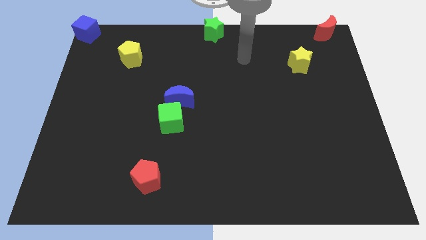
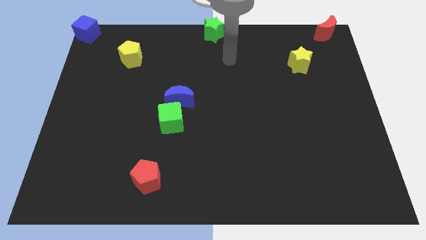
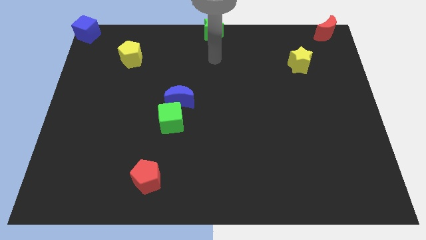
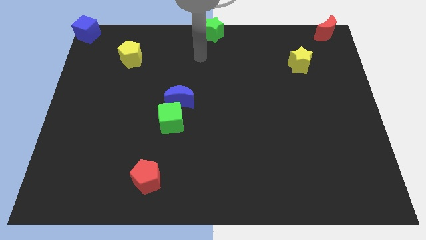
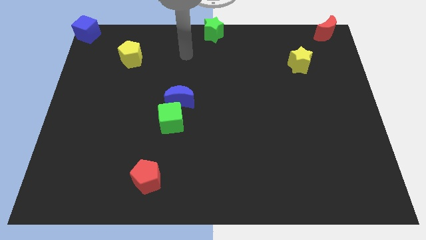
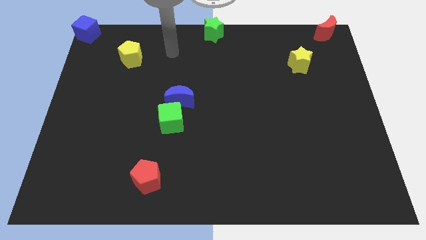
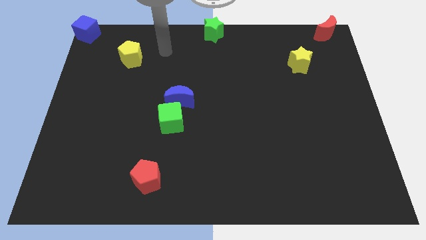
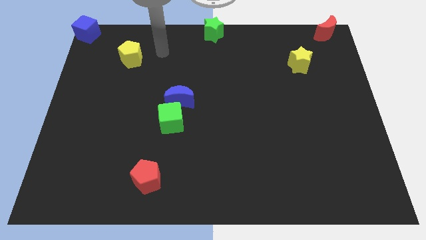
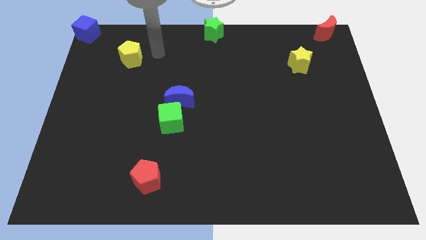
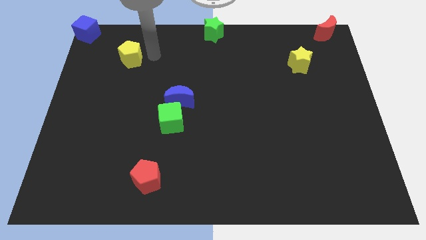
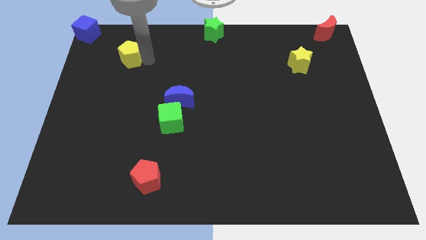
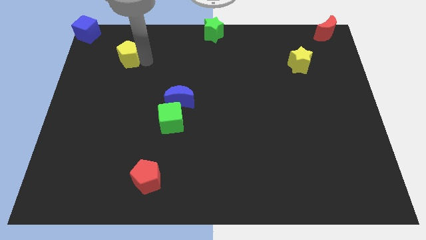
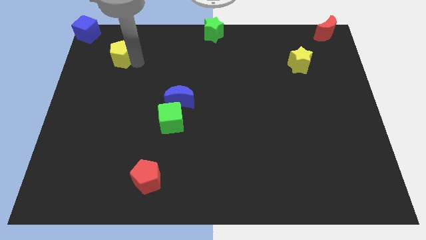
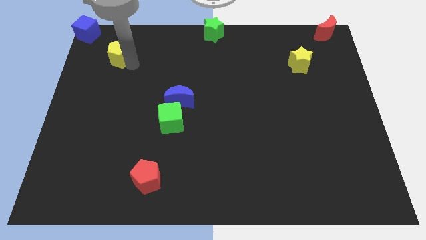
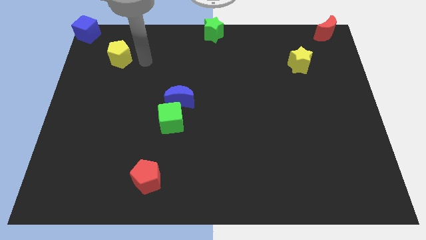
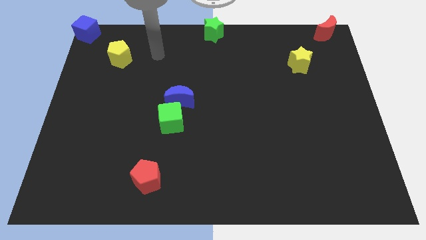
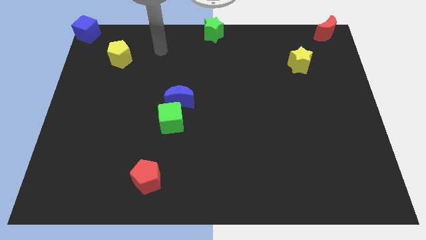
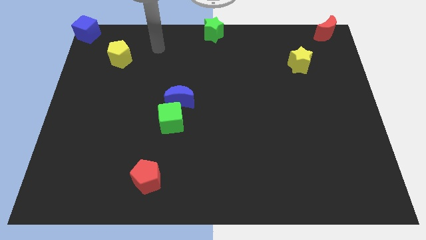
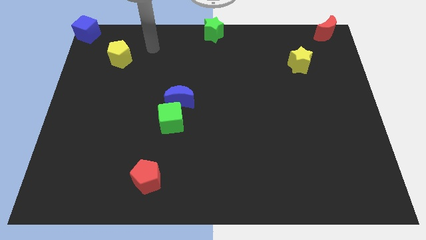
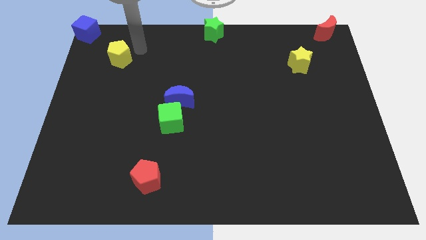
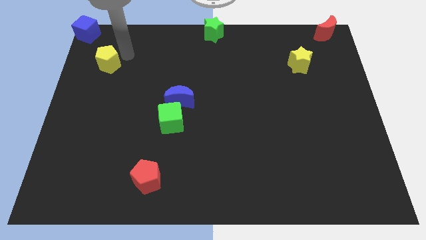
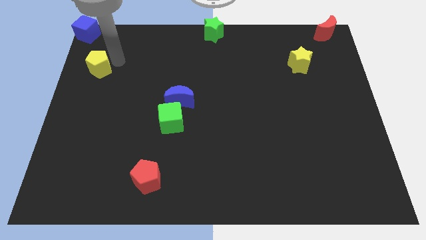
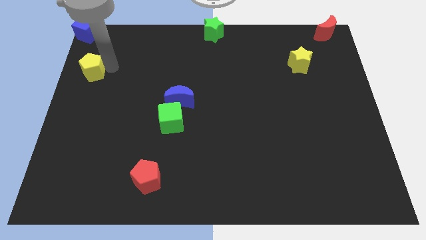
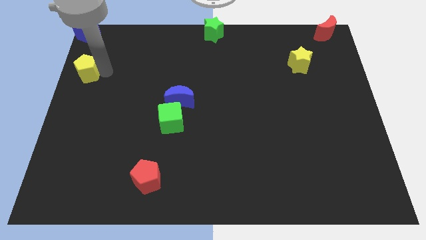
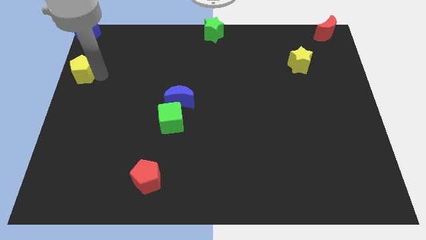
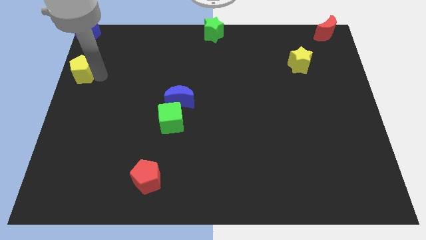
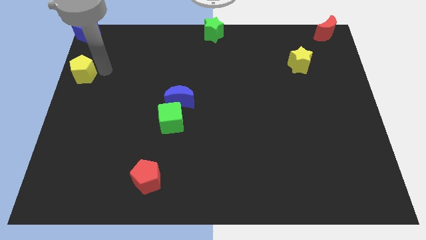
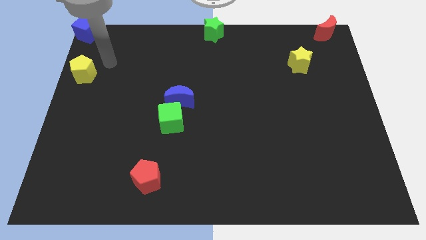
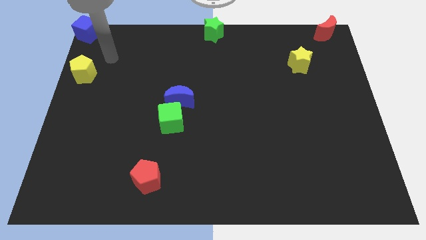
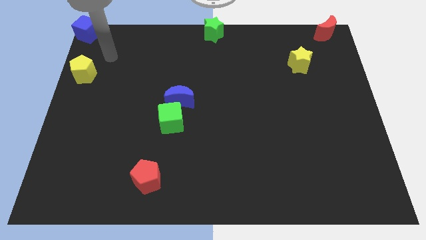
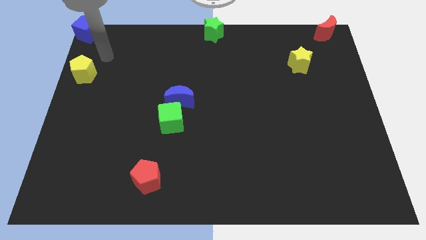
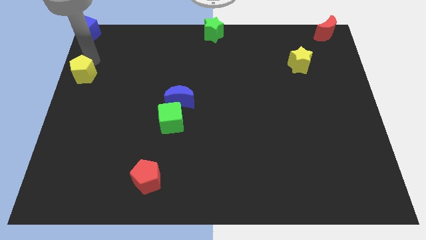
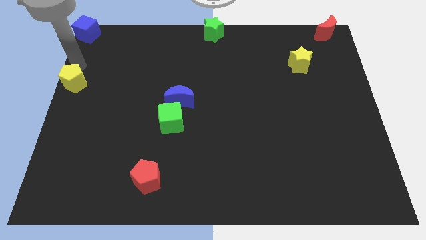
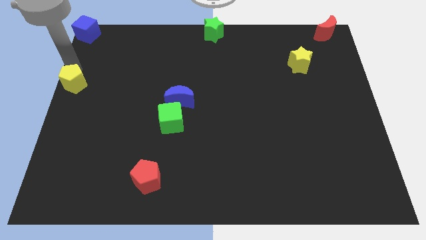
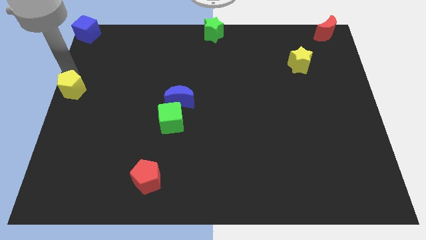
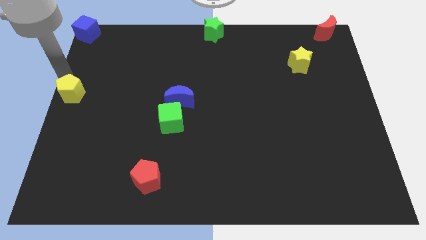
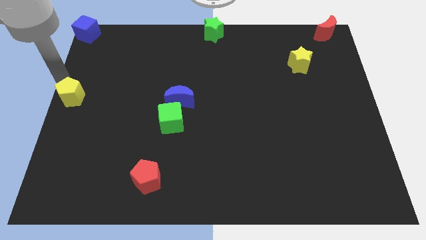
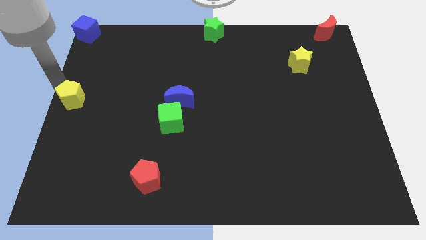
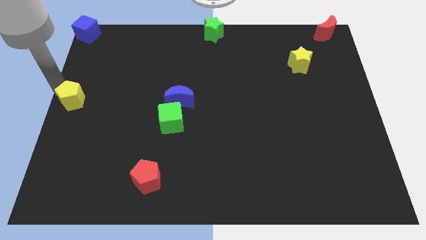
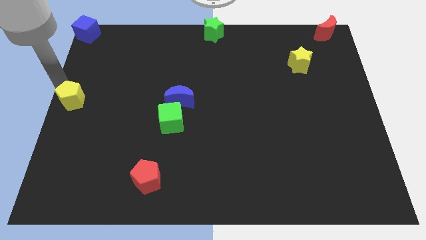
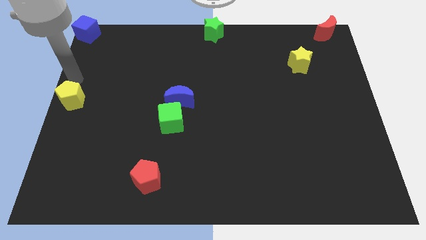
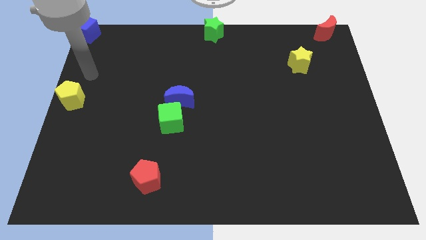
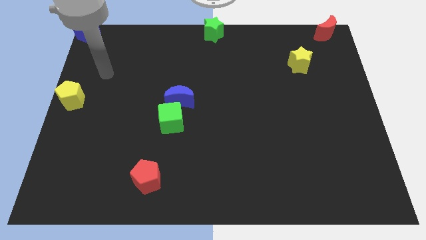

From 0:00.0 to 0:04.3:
move the yellow pentagon vertically to the bottom side of the blue cube

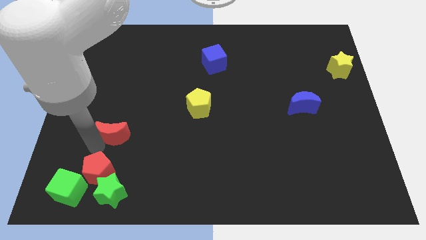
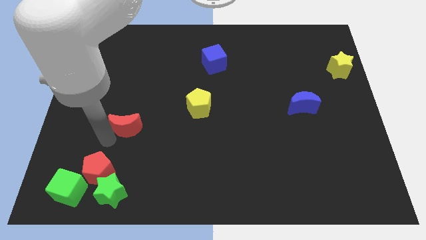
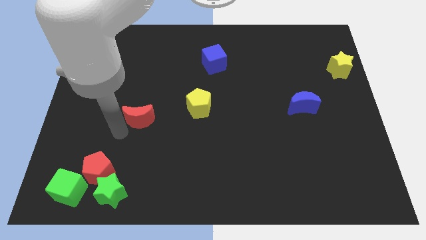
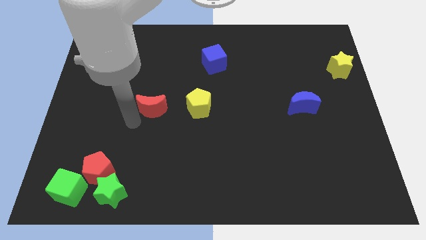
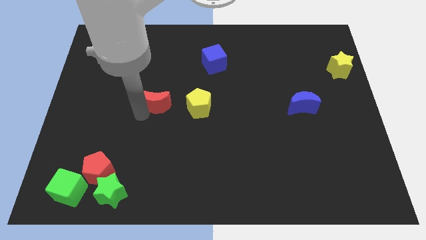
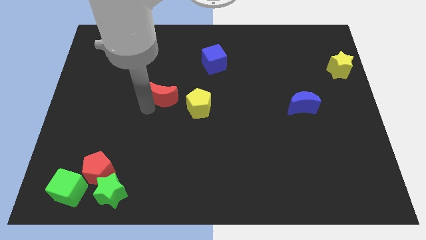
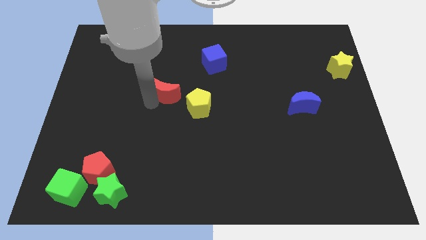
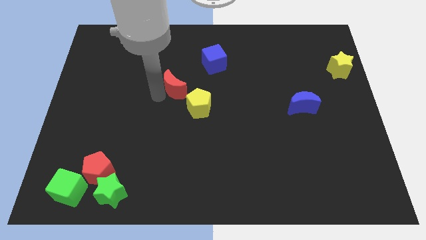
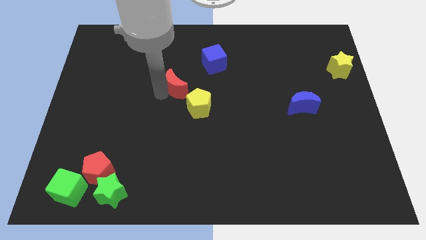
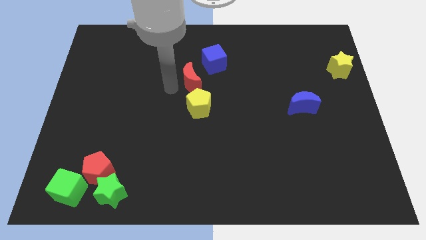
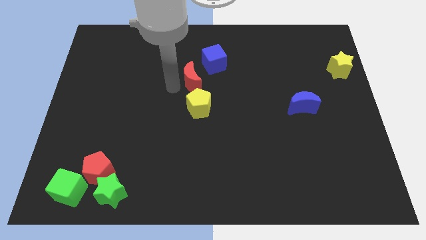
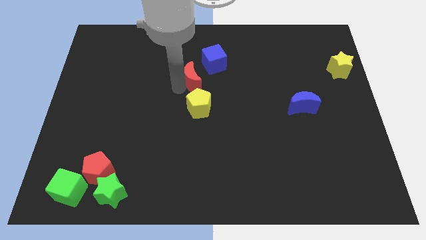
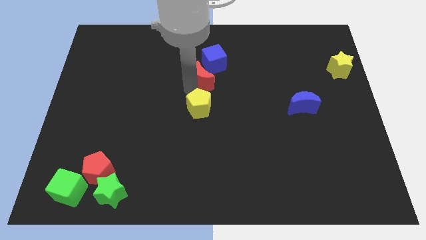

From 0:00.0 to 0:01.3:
push the red crescent at the top of the yellow pentagon

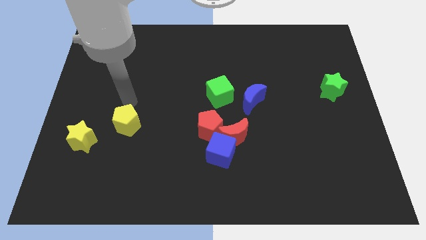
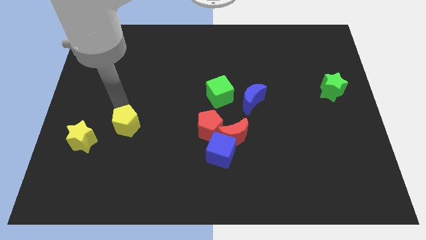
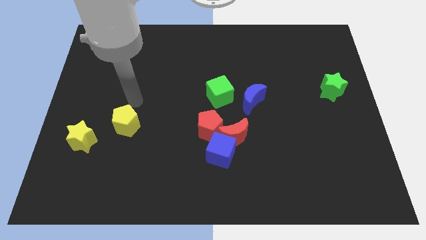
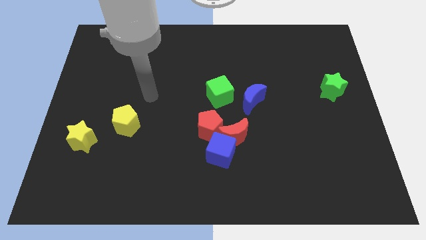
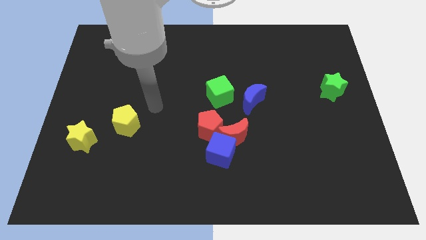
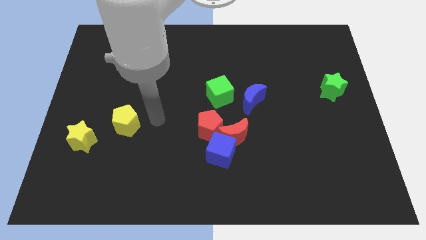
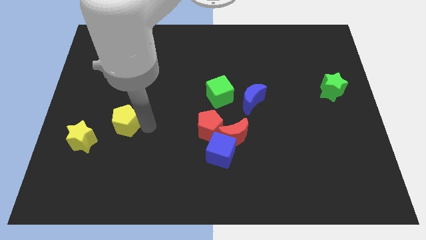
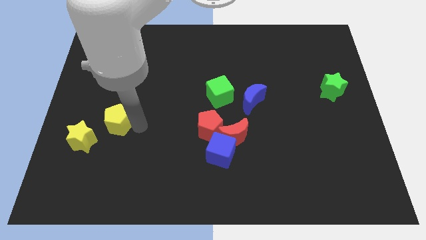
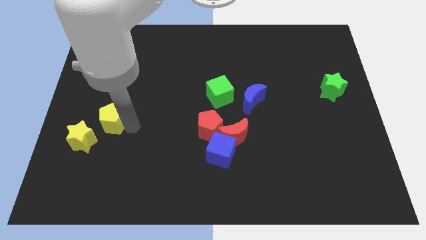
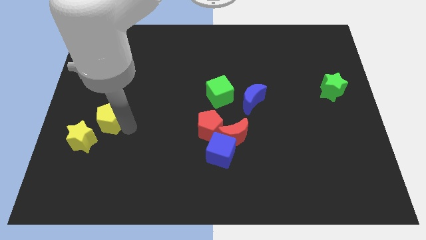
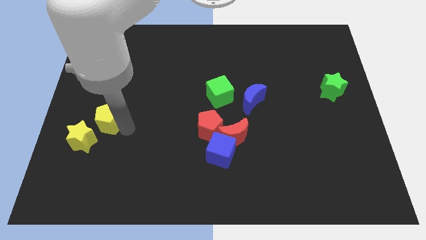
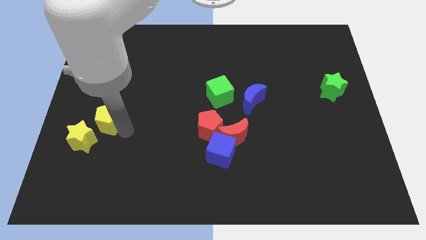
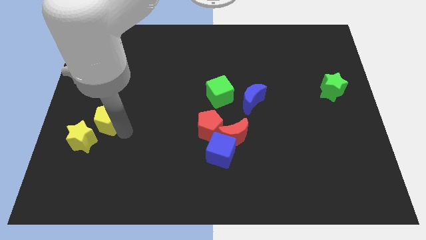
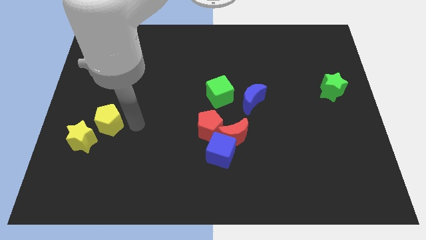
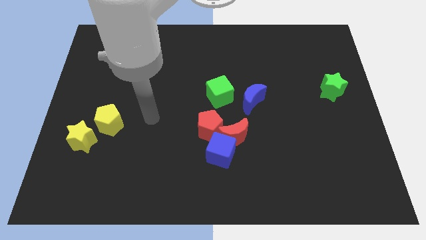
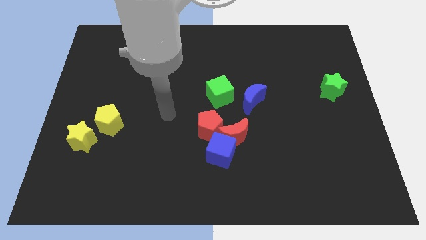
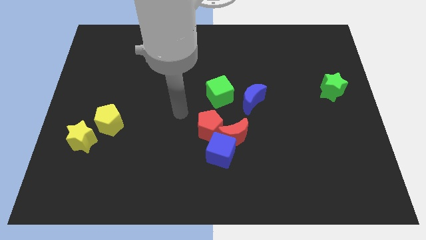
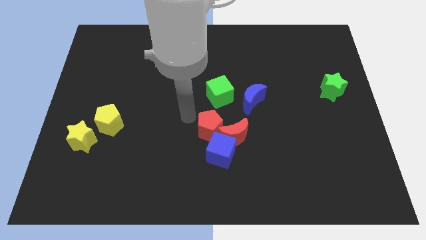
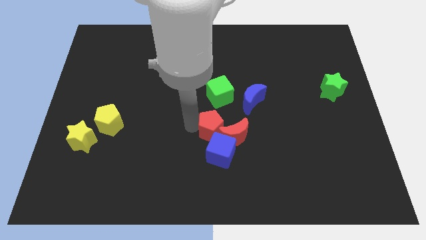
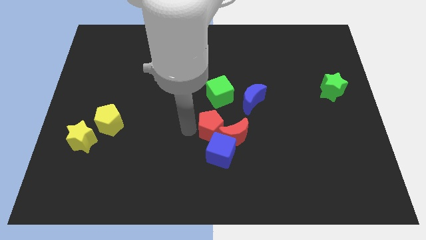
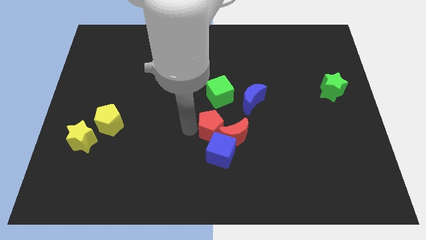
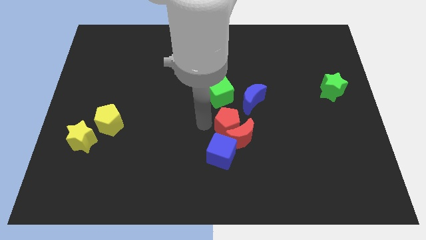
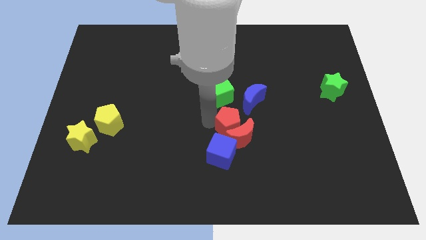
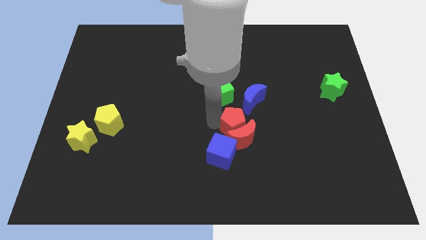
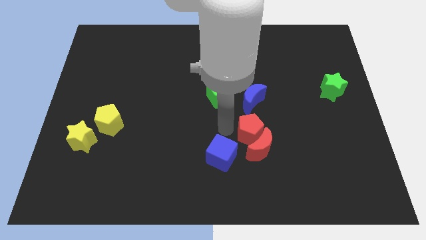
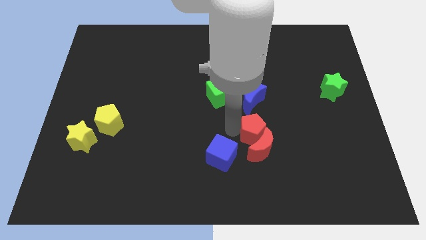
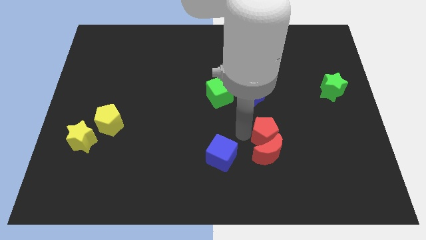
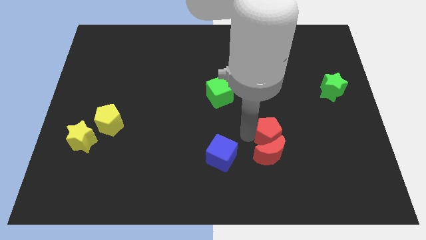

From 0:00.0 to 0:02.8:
place red pentagon below blue crescent

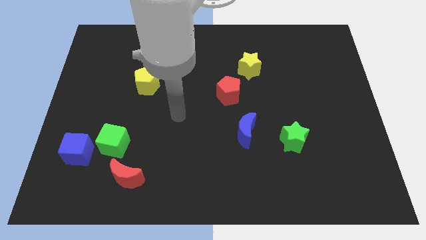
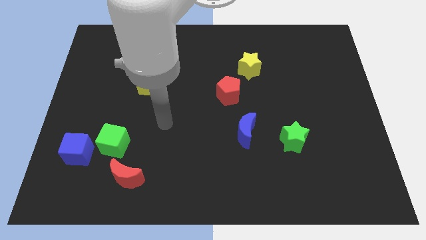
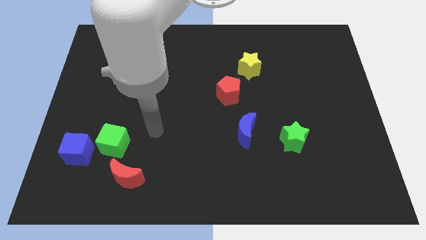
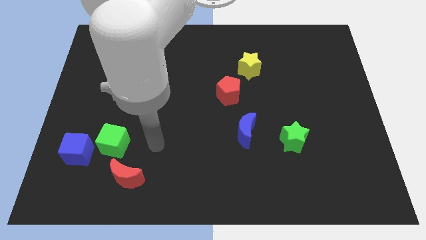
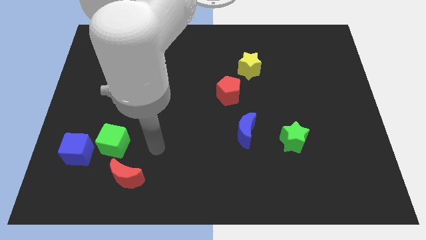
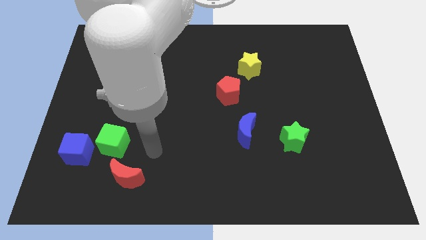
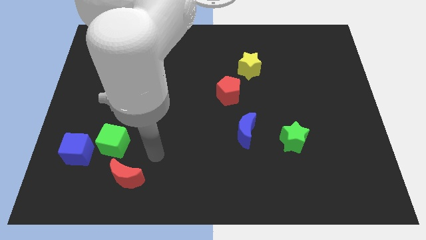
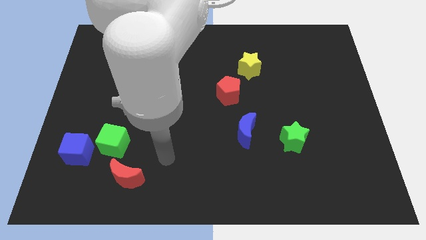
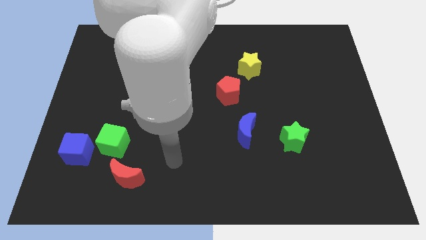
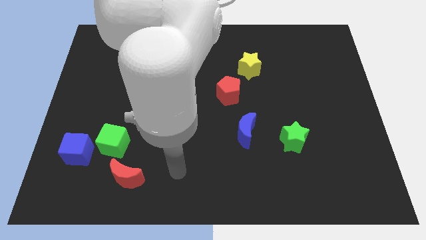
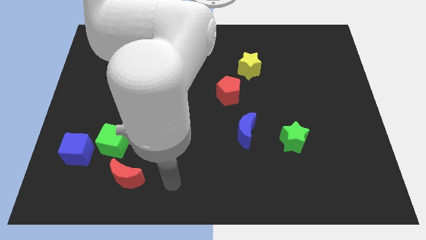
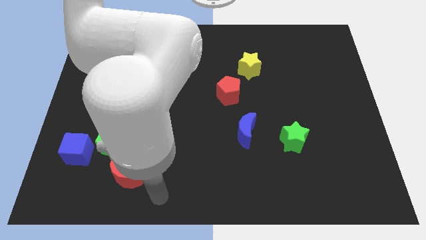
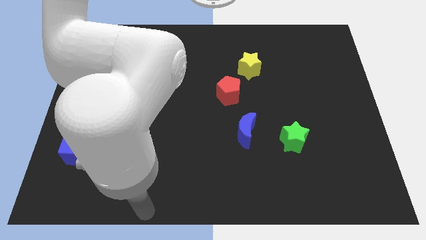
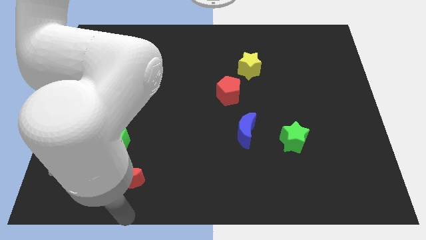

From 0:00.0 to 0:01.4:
put your hand vertically below the red moon
